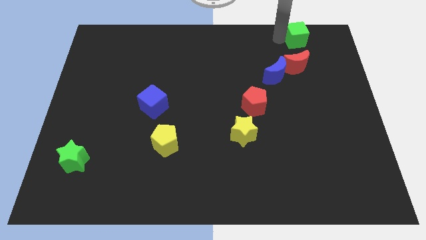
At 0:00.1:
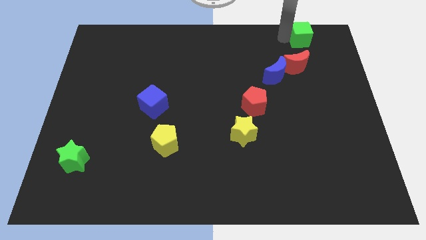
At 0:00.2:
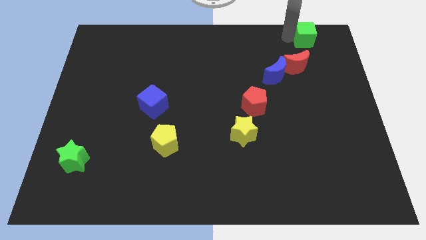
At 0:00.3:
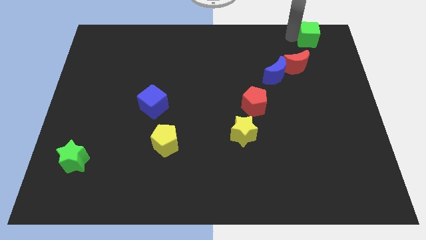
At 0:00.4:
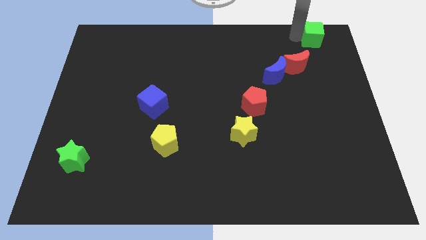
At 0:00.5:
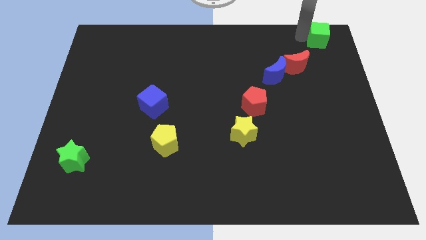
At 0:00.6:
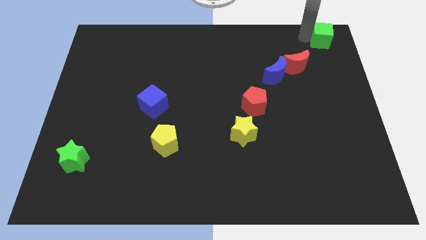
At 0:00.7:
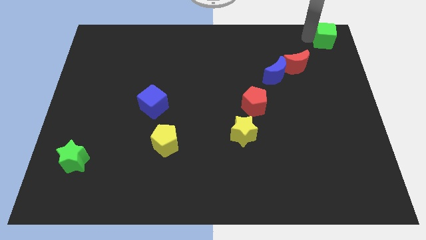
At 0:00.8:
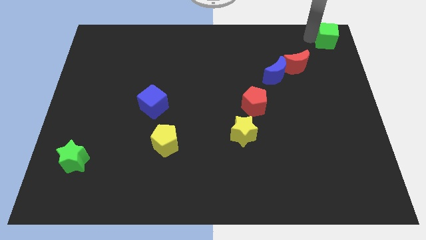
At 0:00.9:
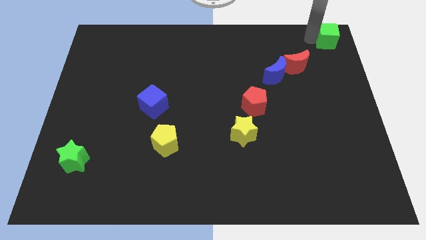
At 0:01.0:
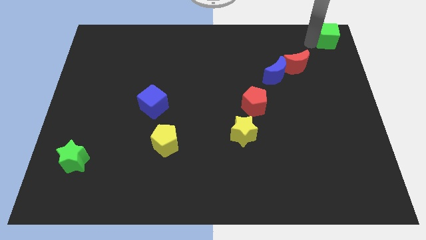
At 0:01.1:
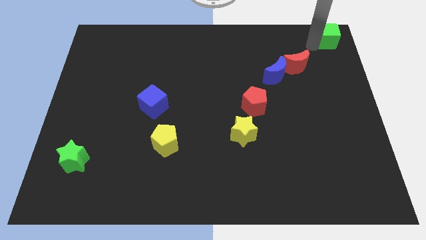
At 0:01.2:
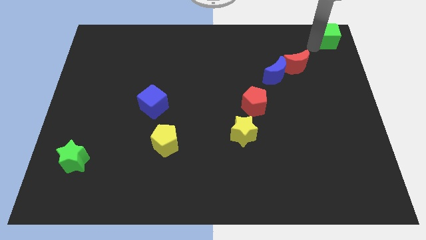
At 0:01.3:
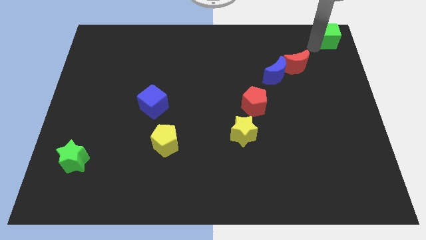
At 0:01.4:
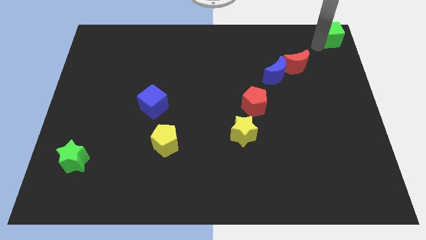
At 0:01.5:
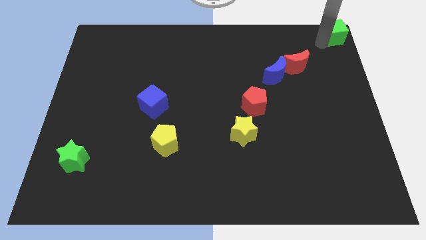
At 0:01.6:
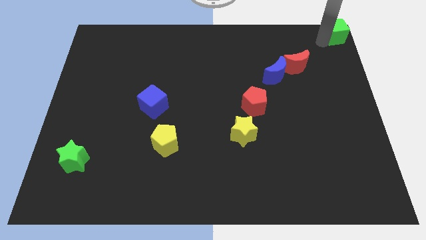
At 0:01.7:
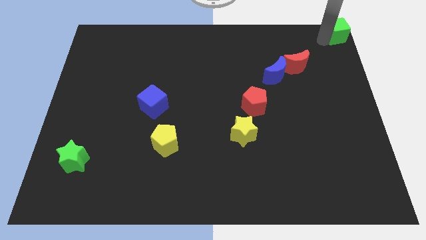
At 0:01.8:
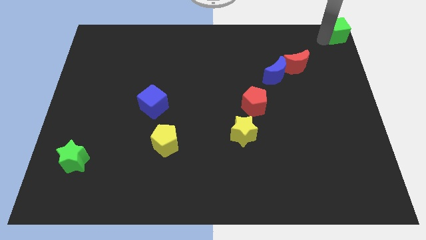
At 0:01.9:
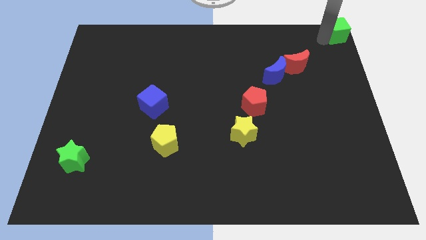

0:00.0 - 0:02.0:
move the green cube to the top right of the board

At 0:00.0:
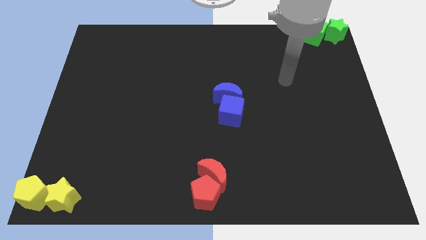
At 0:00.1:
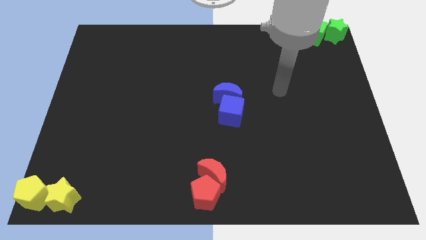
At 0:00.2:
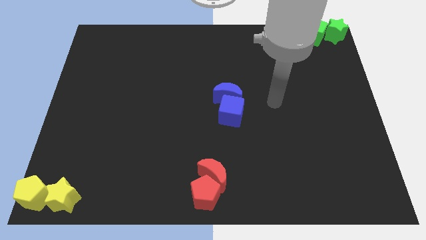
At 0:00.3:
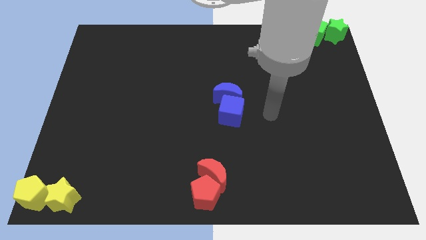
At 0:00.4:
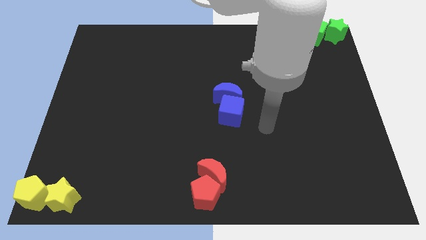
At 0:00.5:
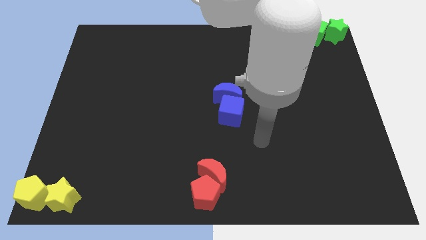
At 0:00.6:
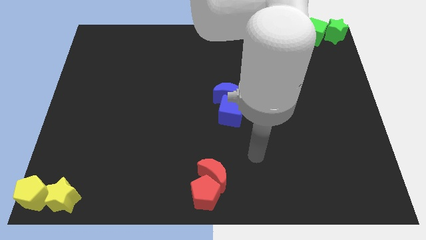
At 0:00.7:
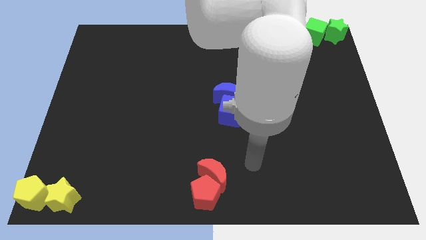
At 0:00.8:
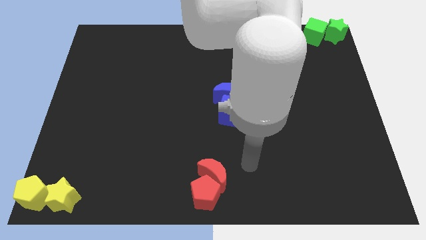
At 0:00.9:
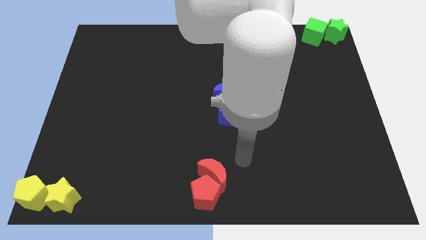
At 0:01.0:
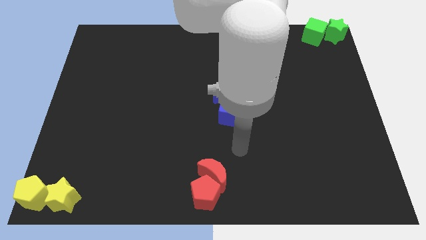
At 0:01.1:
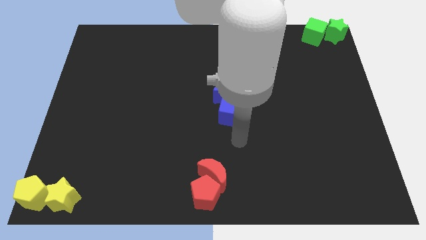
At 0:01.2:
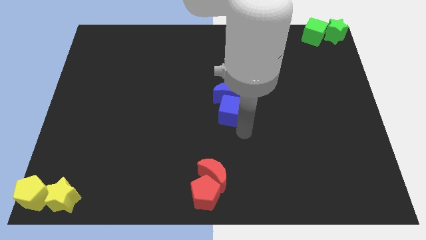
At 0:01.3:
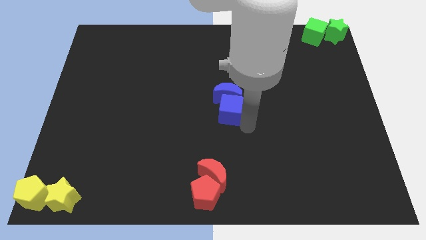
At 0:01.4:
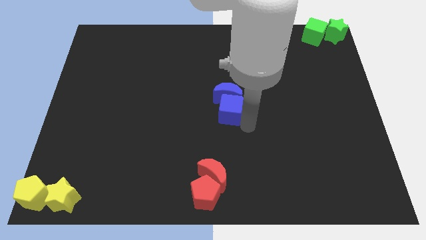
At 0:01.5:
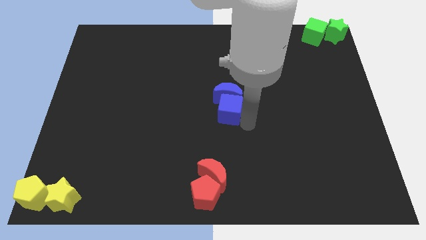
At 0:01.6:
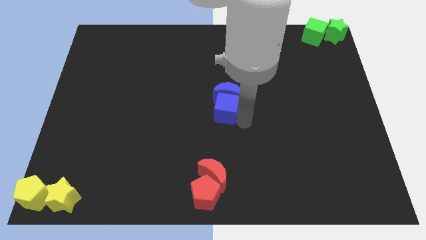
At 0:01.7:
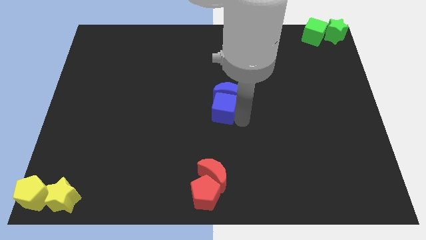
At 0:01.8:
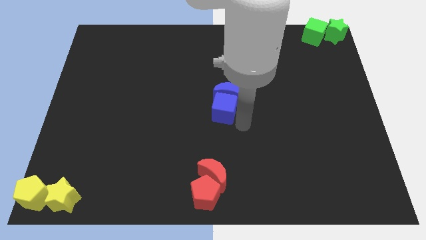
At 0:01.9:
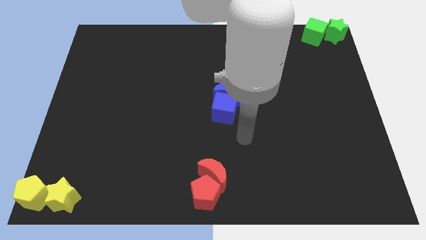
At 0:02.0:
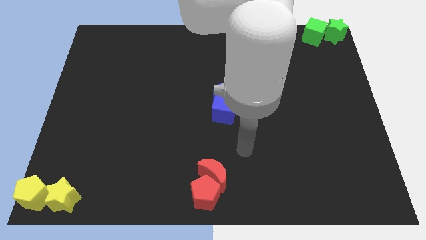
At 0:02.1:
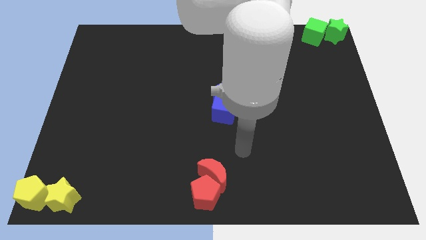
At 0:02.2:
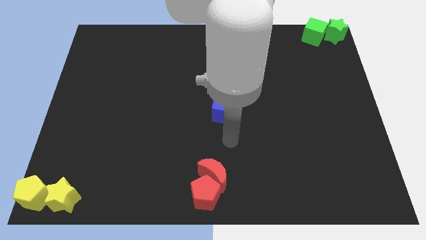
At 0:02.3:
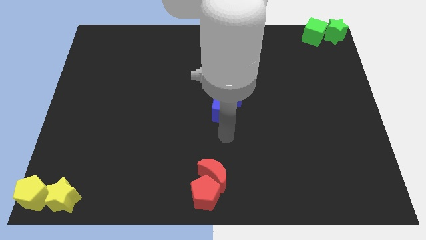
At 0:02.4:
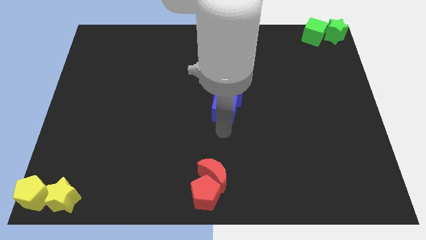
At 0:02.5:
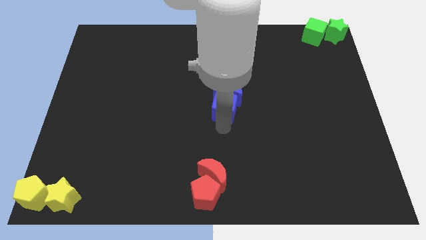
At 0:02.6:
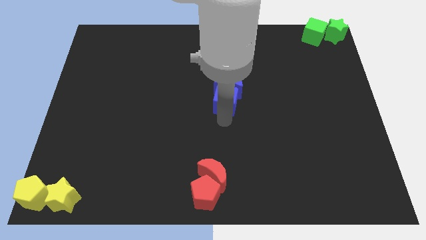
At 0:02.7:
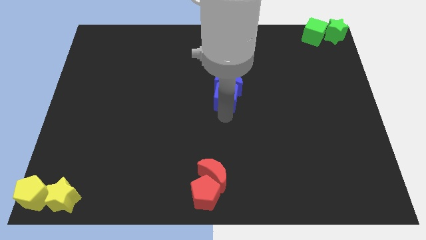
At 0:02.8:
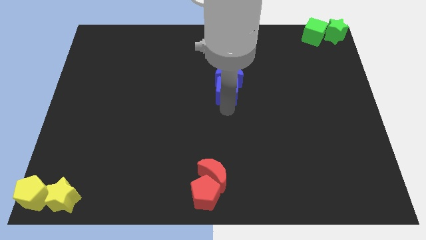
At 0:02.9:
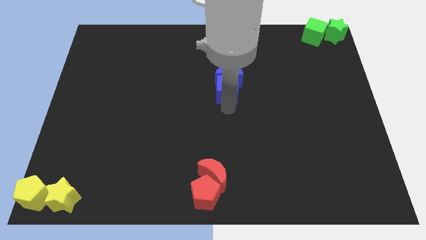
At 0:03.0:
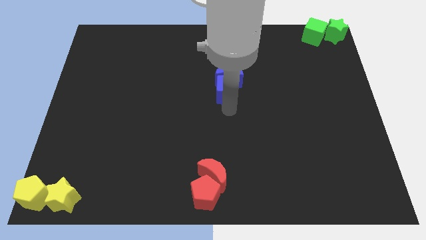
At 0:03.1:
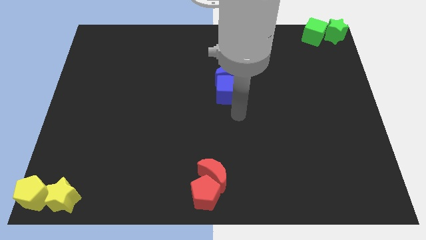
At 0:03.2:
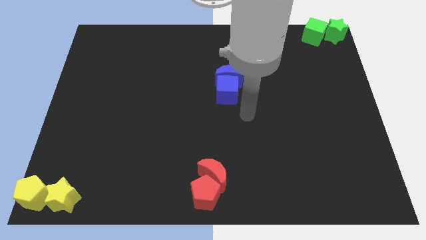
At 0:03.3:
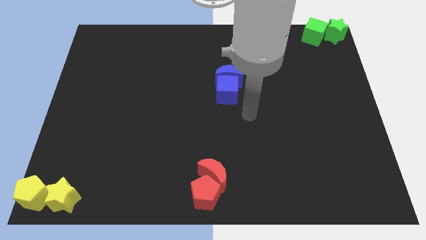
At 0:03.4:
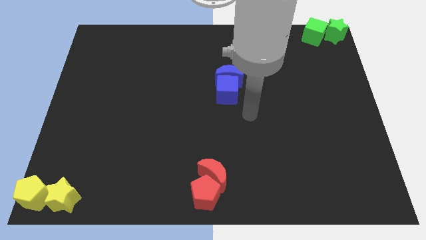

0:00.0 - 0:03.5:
push the blue blocks towards the top center of the board

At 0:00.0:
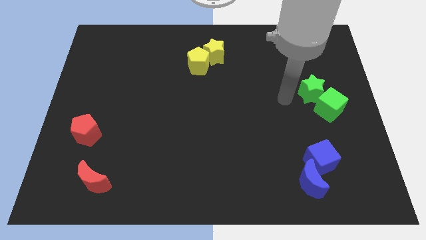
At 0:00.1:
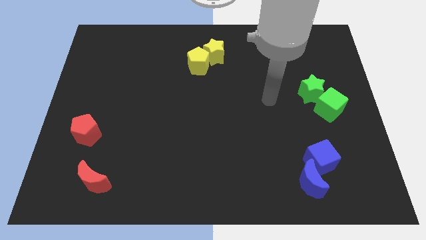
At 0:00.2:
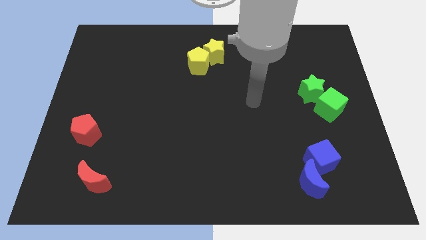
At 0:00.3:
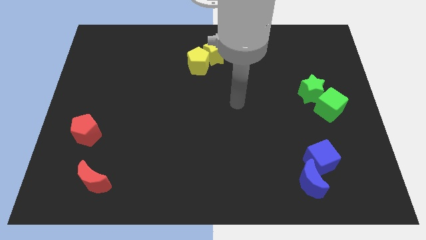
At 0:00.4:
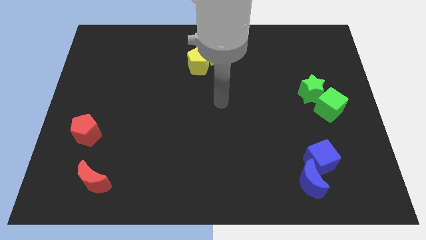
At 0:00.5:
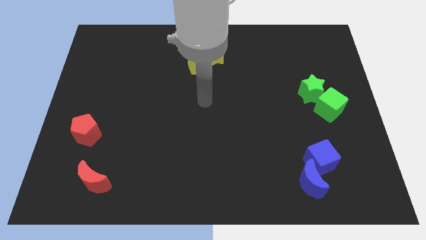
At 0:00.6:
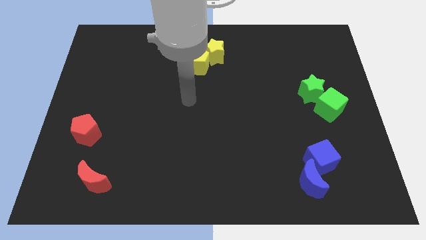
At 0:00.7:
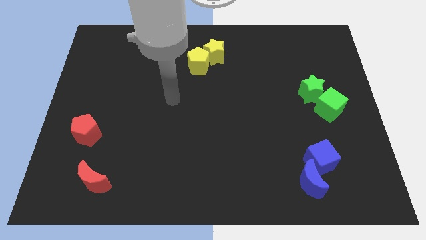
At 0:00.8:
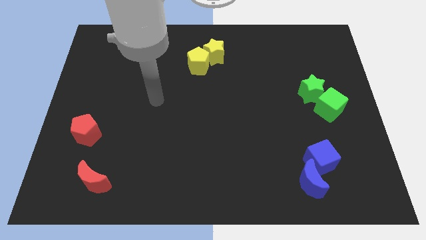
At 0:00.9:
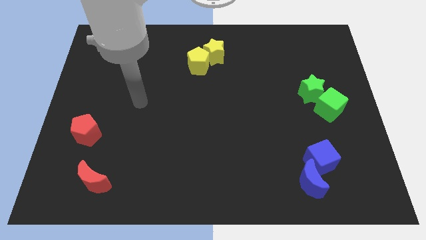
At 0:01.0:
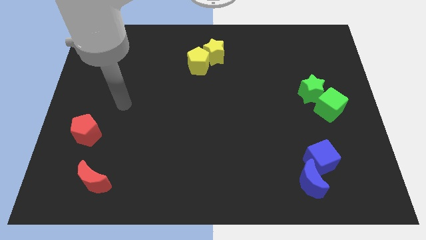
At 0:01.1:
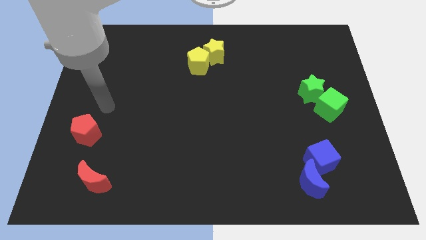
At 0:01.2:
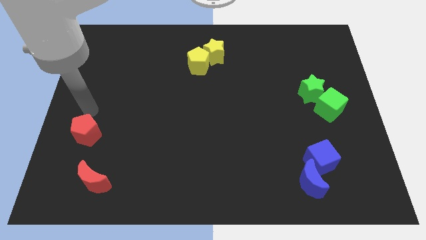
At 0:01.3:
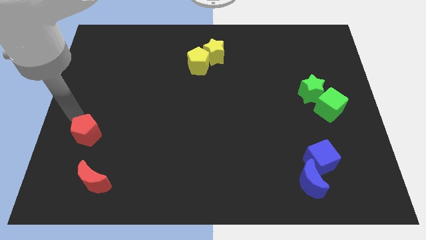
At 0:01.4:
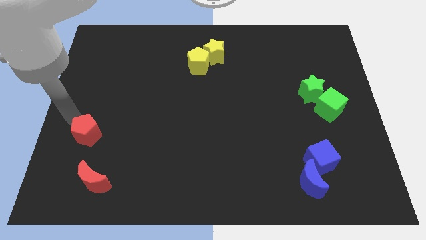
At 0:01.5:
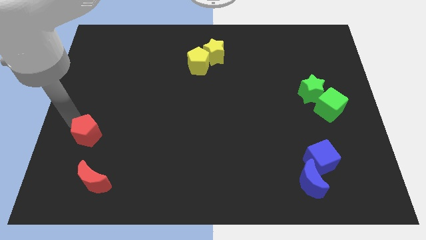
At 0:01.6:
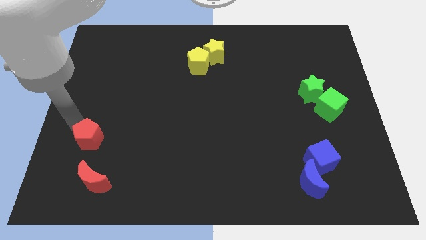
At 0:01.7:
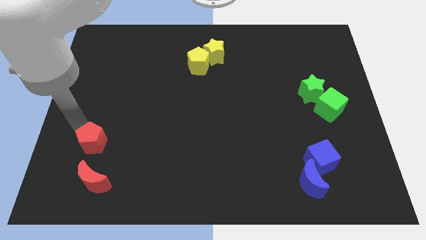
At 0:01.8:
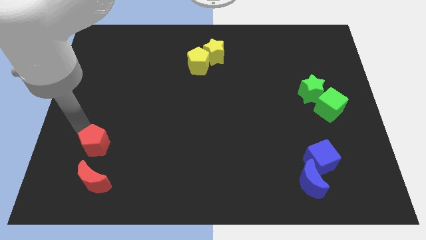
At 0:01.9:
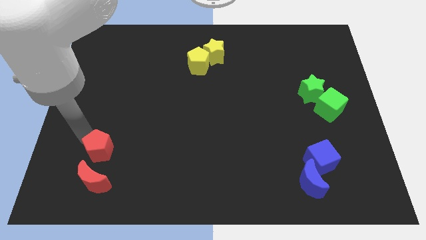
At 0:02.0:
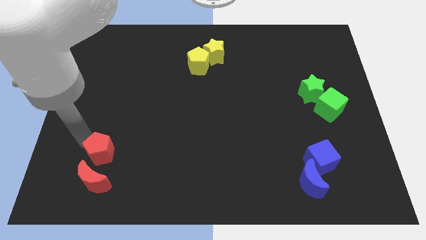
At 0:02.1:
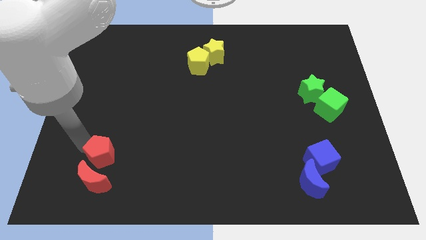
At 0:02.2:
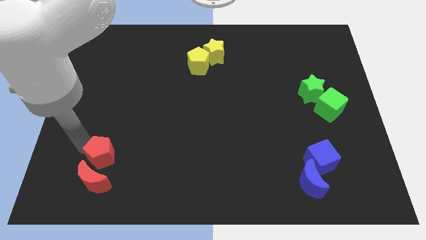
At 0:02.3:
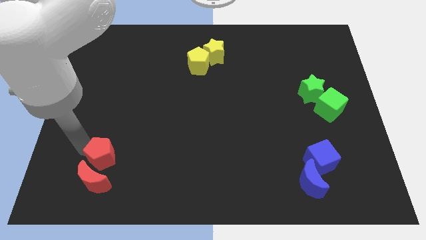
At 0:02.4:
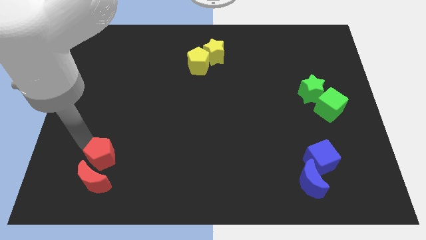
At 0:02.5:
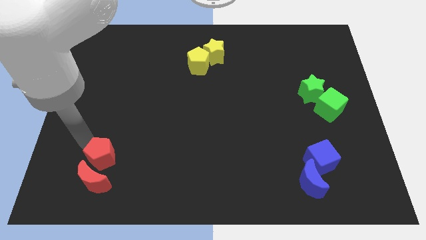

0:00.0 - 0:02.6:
push the red pentagon close to the top side of the red crescent

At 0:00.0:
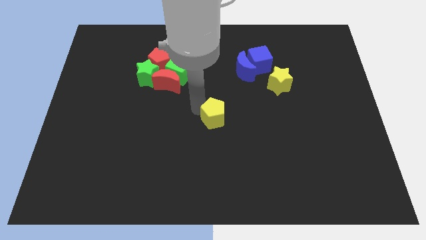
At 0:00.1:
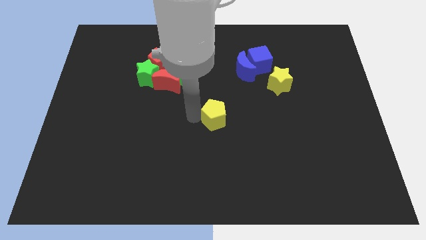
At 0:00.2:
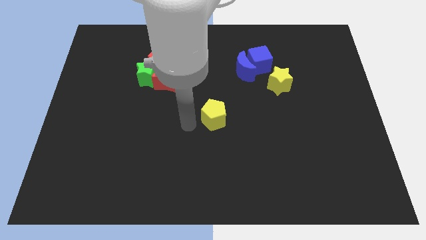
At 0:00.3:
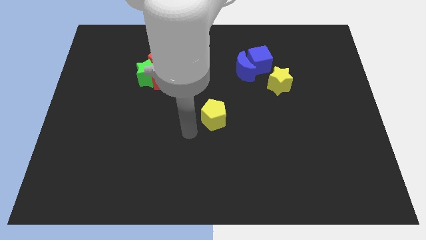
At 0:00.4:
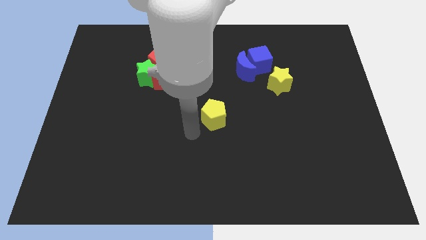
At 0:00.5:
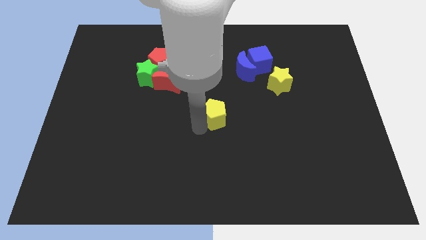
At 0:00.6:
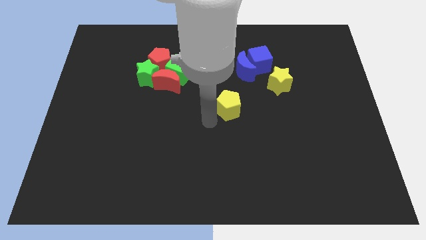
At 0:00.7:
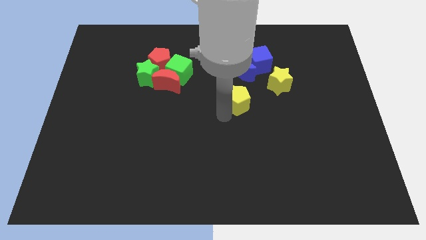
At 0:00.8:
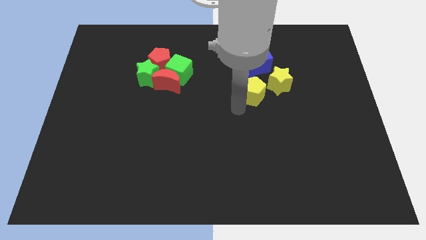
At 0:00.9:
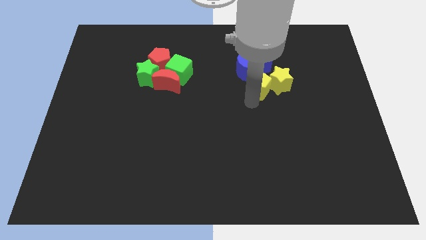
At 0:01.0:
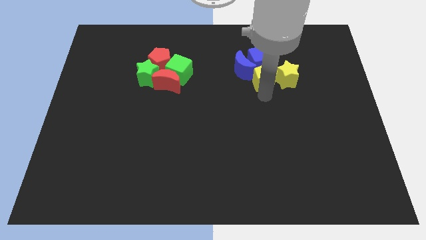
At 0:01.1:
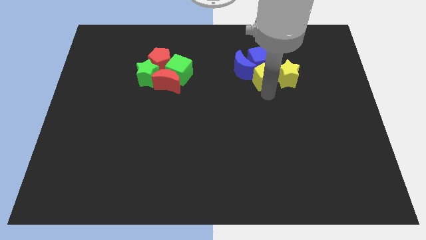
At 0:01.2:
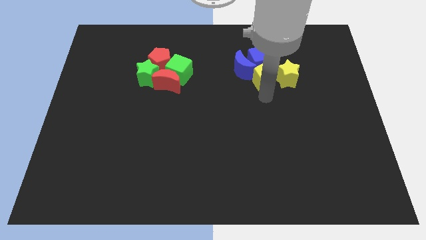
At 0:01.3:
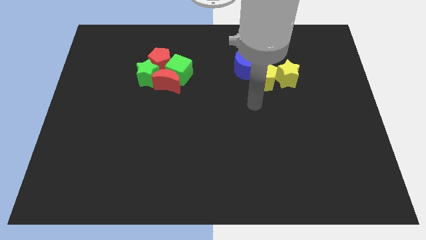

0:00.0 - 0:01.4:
slide the yellow pentagon into the yellow star
